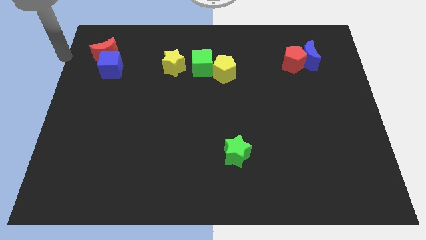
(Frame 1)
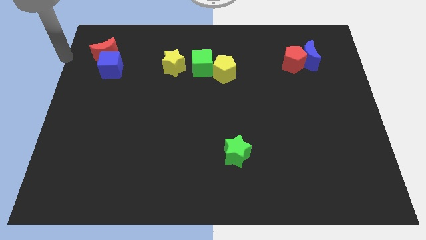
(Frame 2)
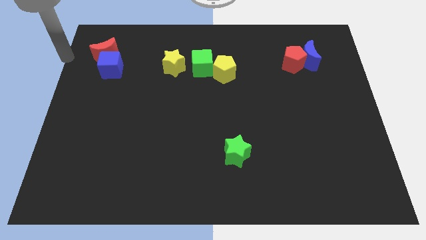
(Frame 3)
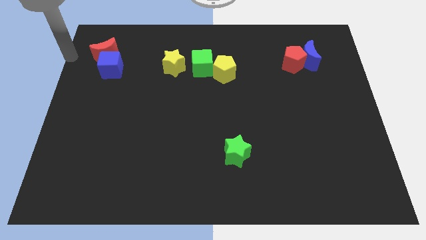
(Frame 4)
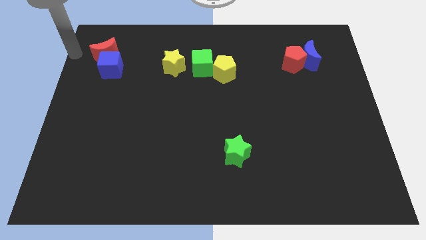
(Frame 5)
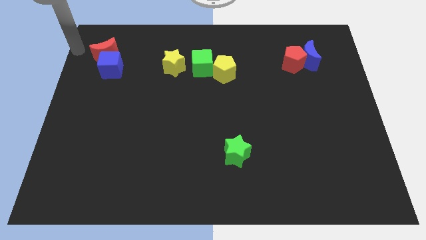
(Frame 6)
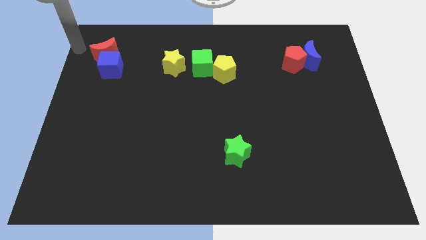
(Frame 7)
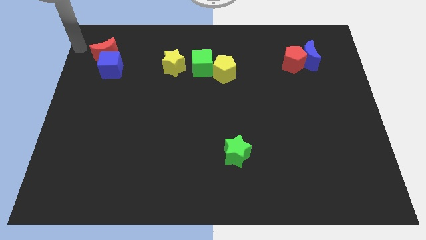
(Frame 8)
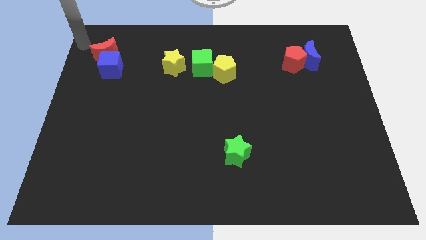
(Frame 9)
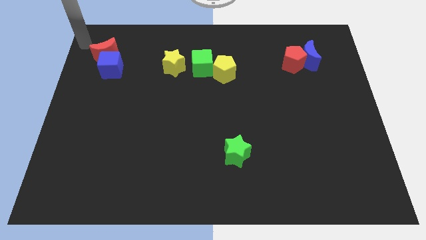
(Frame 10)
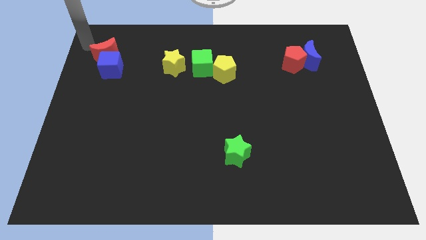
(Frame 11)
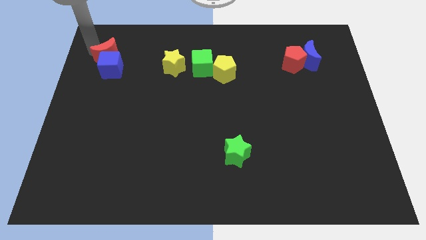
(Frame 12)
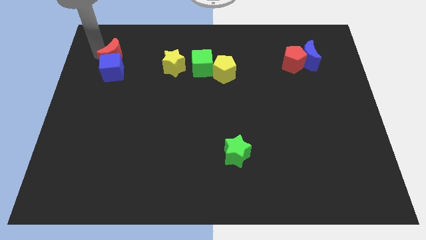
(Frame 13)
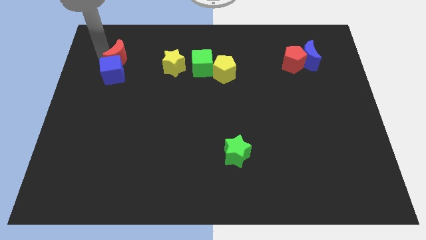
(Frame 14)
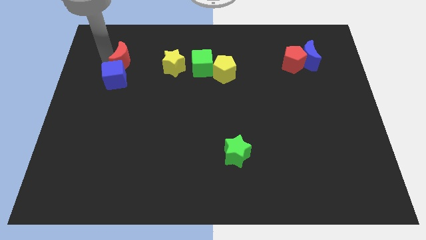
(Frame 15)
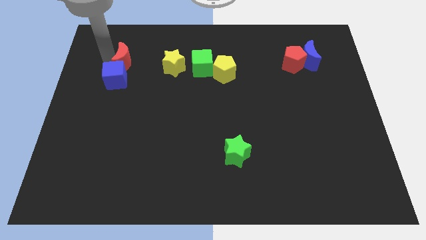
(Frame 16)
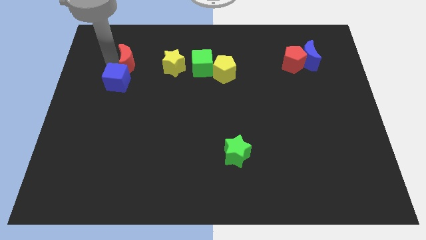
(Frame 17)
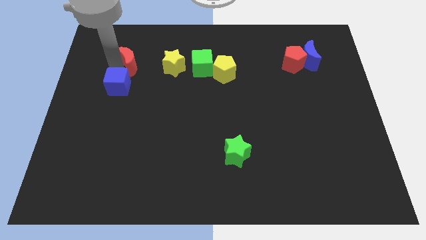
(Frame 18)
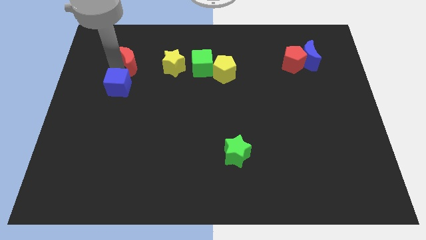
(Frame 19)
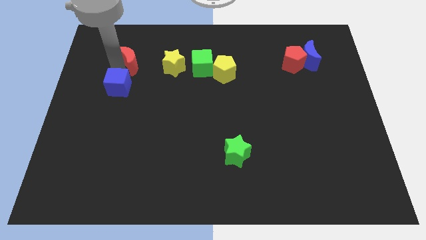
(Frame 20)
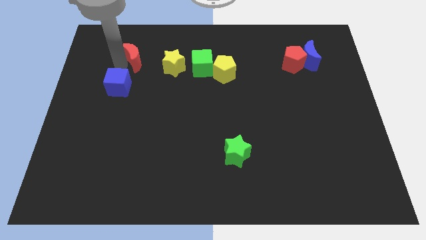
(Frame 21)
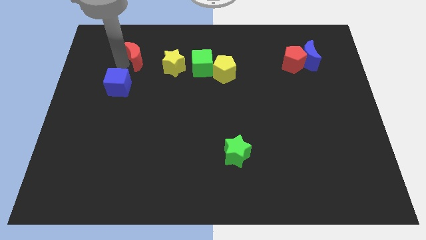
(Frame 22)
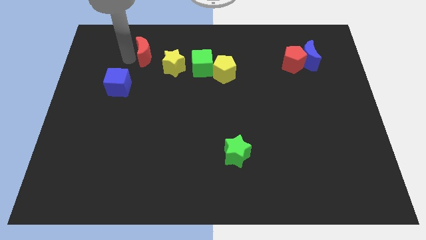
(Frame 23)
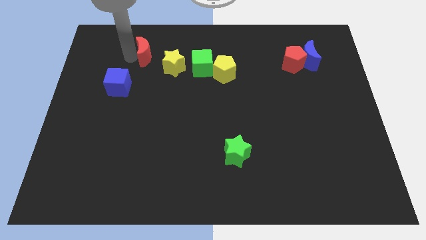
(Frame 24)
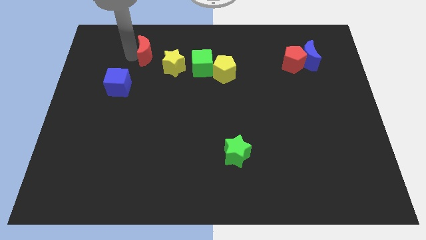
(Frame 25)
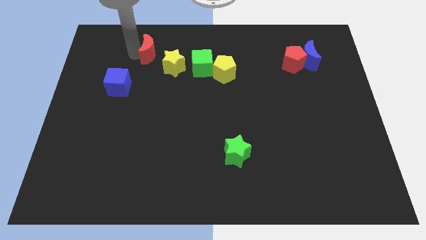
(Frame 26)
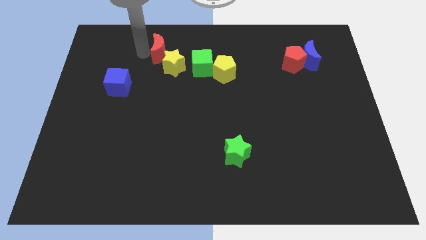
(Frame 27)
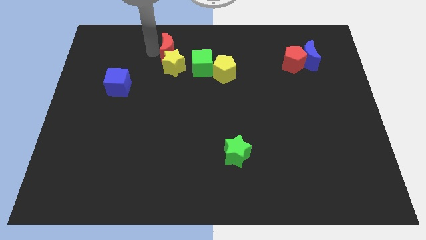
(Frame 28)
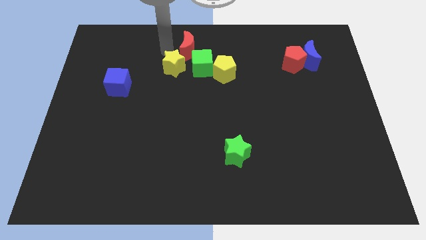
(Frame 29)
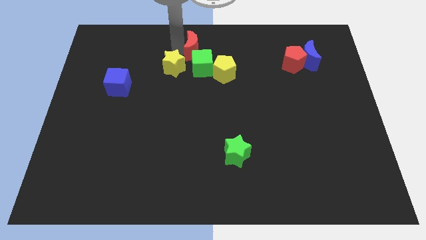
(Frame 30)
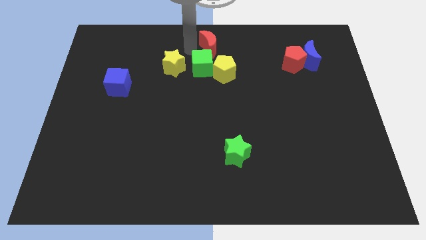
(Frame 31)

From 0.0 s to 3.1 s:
place red crescent above green cube

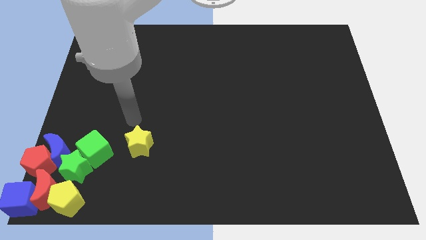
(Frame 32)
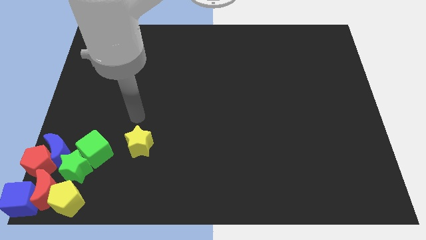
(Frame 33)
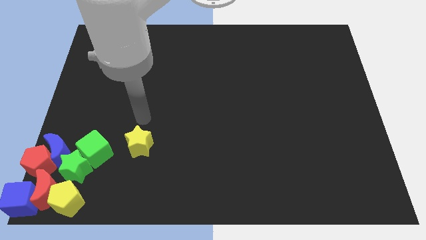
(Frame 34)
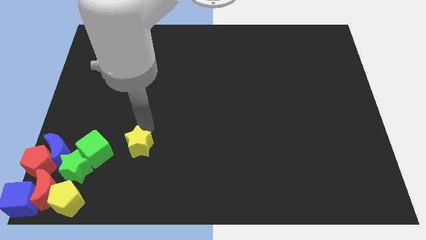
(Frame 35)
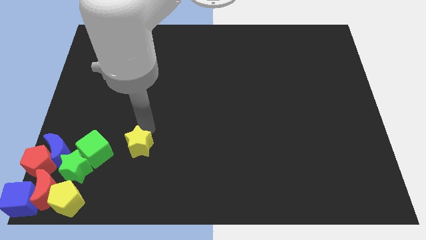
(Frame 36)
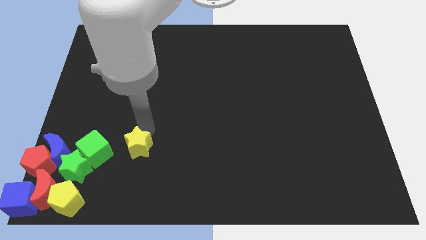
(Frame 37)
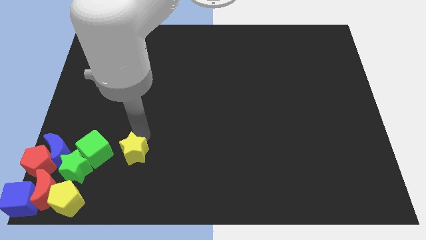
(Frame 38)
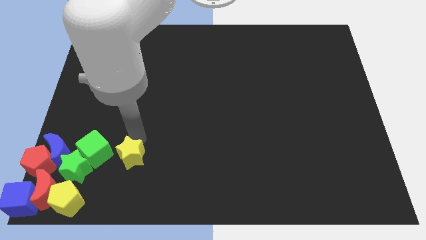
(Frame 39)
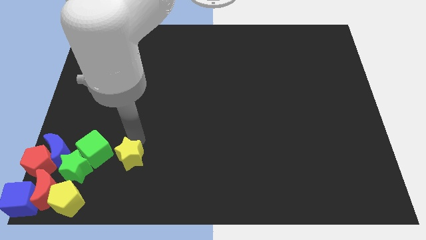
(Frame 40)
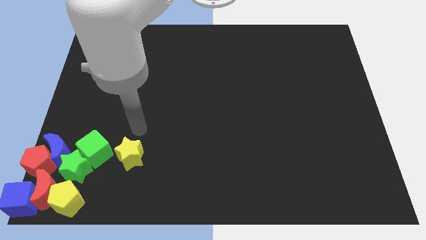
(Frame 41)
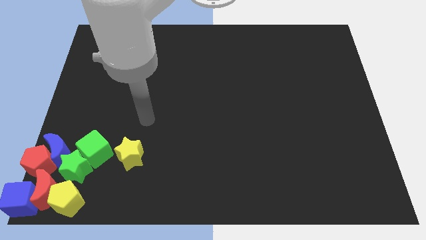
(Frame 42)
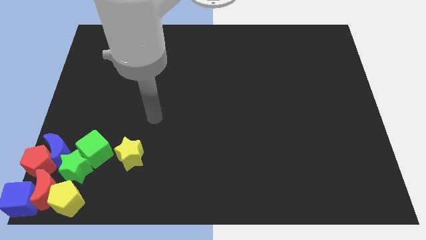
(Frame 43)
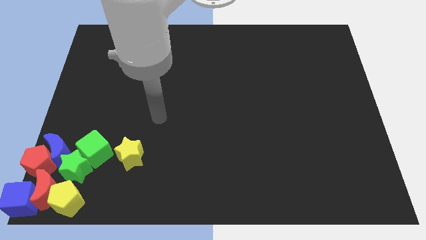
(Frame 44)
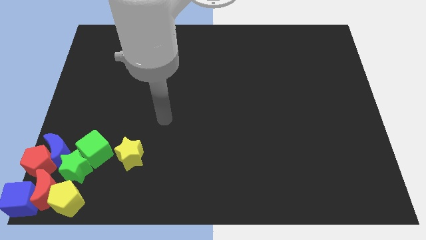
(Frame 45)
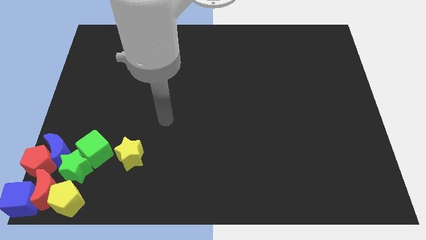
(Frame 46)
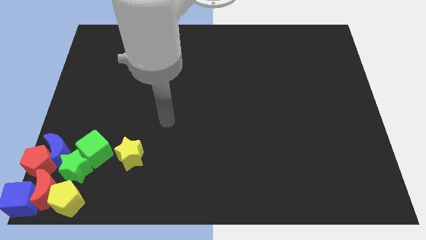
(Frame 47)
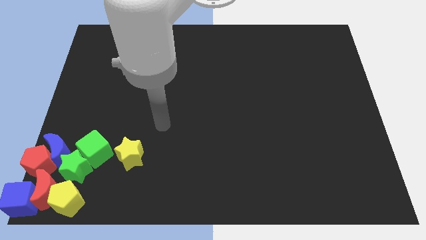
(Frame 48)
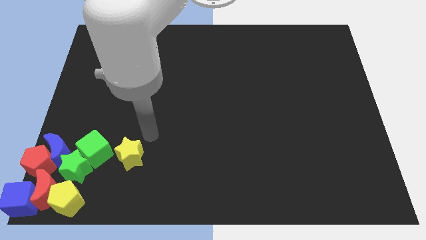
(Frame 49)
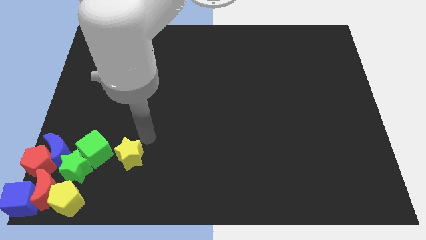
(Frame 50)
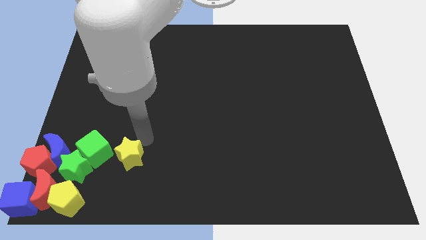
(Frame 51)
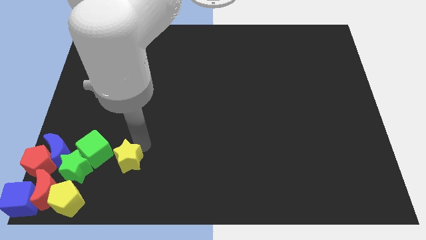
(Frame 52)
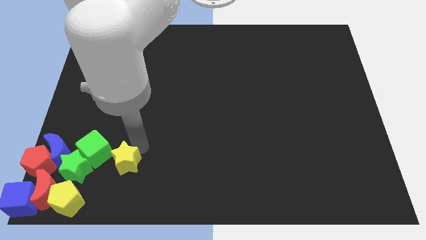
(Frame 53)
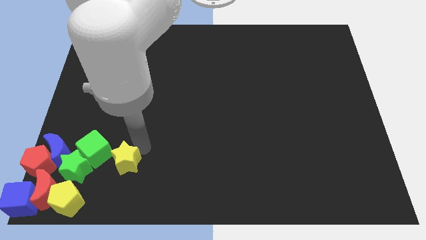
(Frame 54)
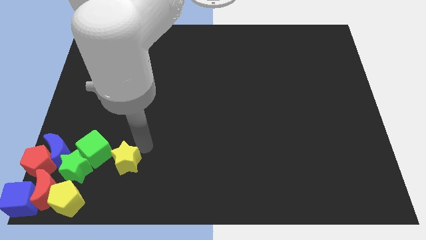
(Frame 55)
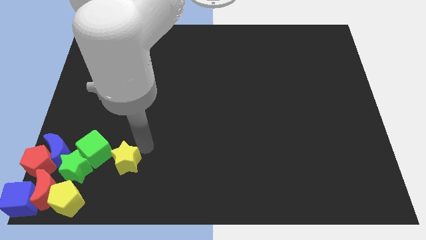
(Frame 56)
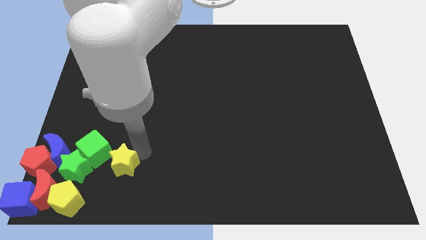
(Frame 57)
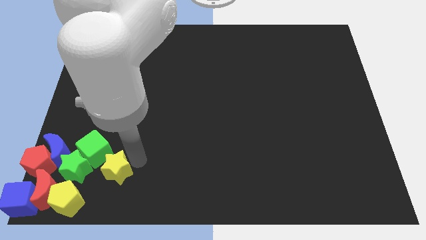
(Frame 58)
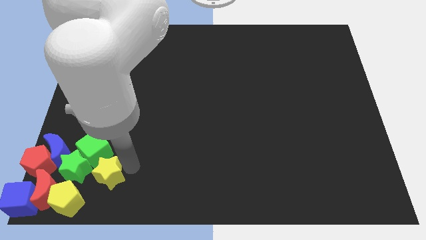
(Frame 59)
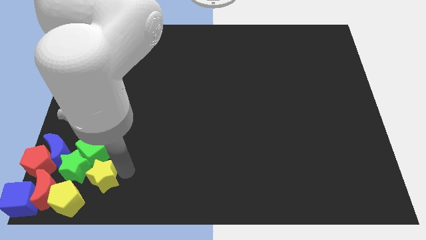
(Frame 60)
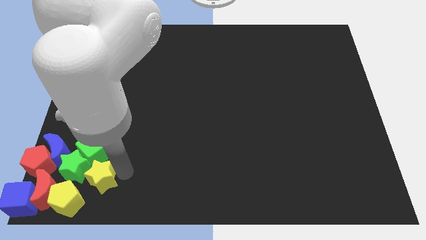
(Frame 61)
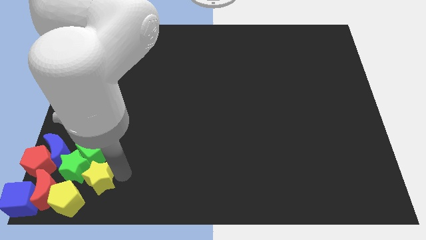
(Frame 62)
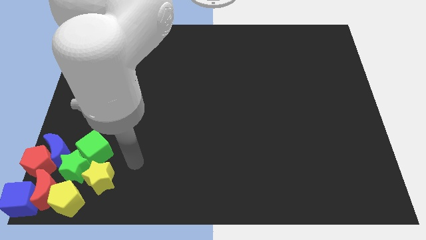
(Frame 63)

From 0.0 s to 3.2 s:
place the yellow star close to the green star

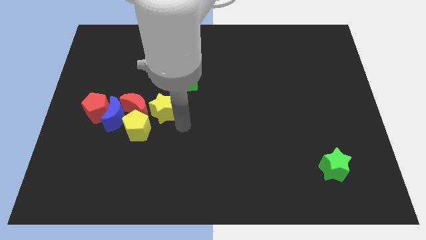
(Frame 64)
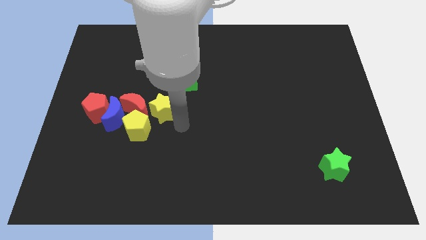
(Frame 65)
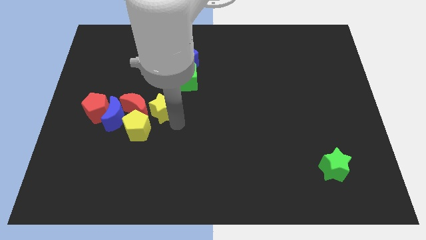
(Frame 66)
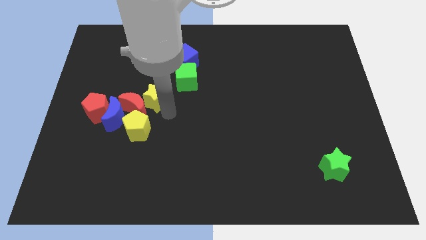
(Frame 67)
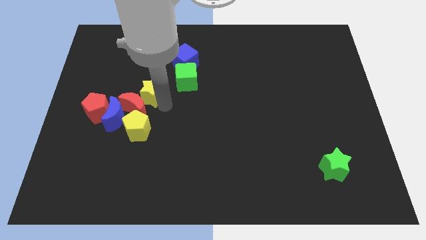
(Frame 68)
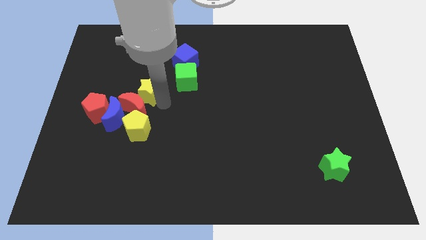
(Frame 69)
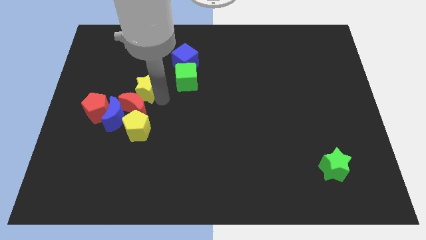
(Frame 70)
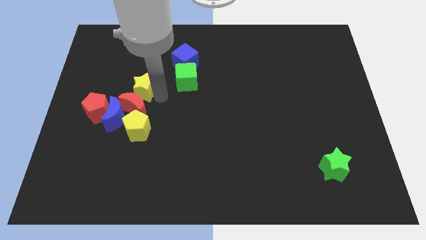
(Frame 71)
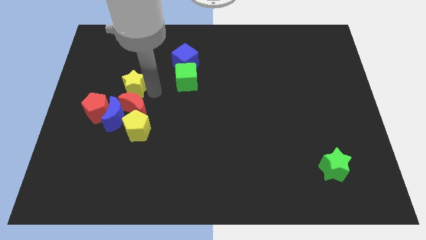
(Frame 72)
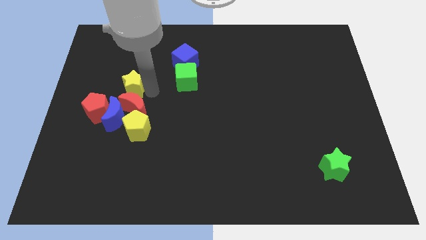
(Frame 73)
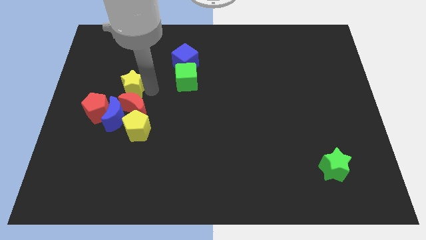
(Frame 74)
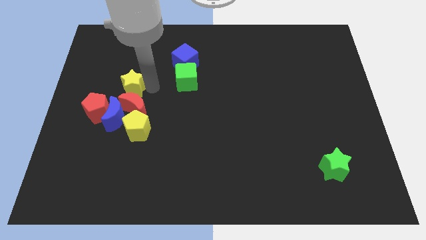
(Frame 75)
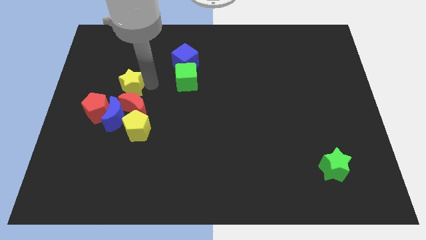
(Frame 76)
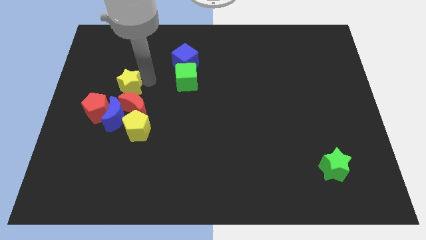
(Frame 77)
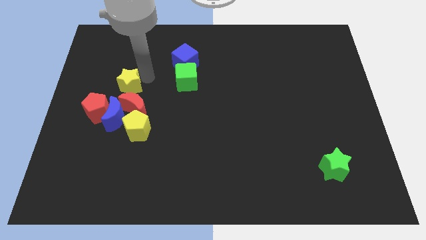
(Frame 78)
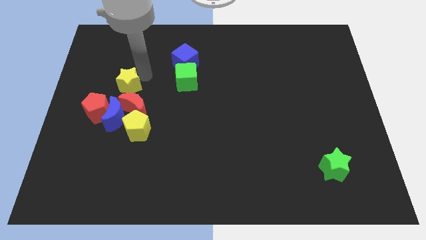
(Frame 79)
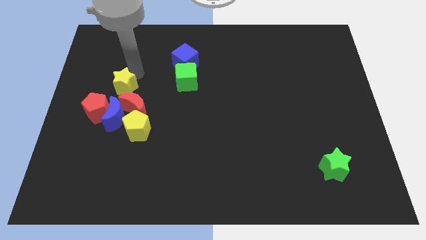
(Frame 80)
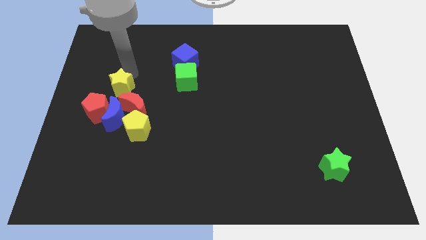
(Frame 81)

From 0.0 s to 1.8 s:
place the yellow star above the red moon

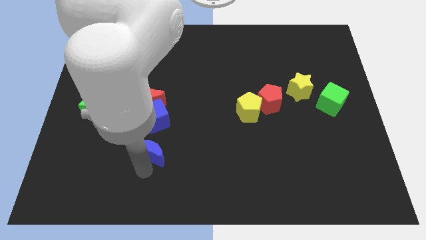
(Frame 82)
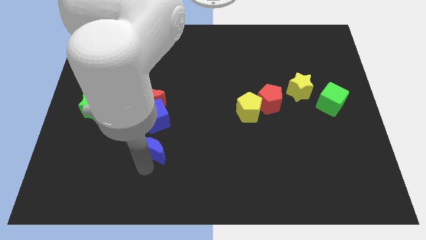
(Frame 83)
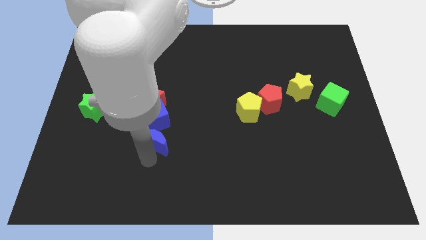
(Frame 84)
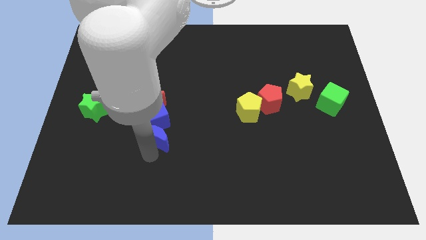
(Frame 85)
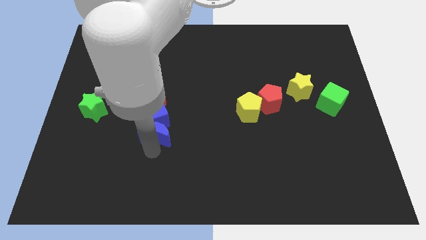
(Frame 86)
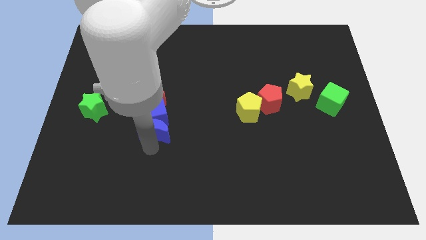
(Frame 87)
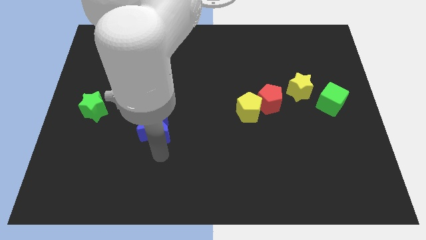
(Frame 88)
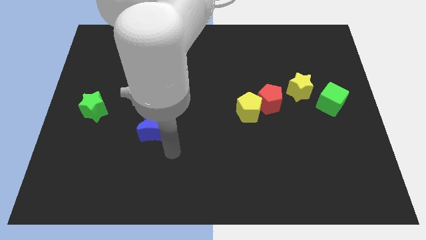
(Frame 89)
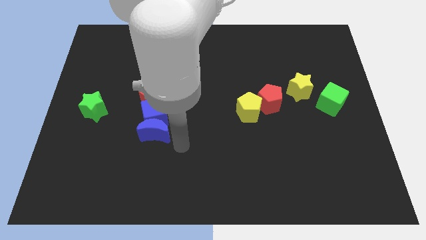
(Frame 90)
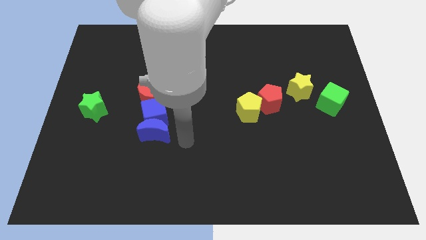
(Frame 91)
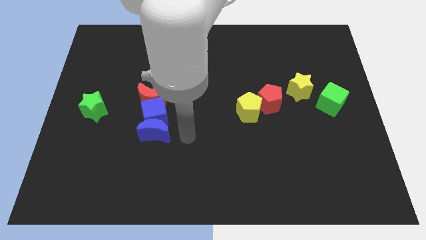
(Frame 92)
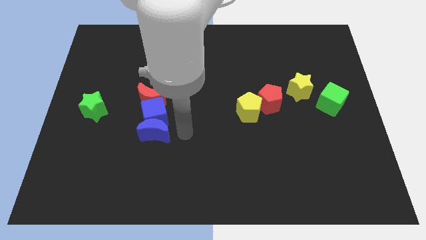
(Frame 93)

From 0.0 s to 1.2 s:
push the blue crescent into the blue cube
